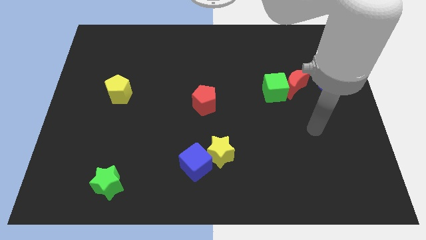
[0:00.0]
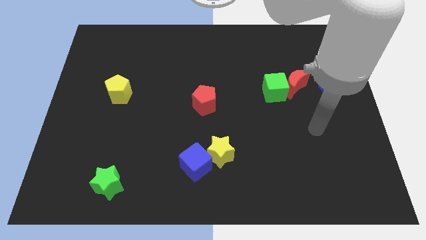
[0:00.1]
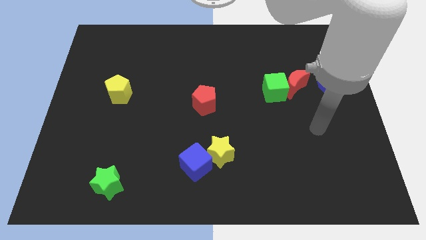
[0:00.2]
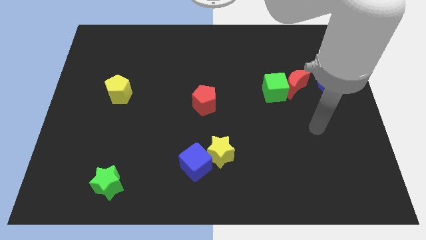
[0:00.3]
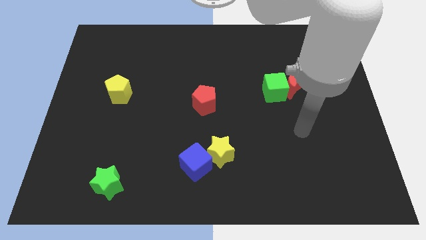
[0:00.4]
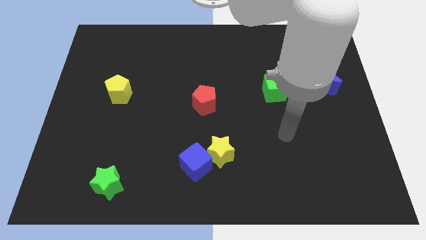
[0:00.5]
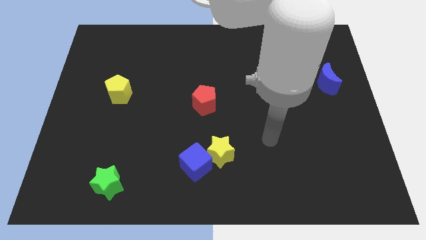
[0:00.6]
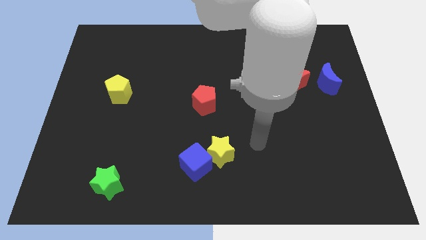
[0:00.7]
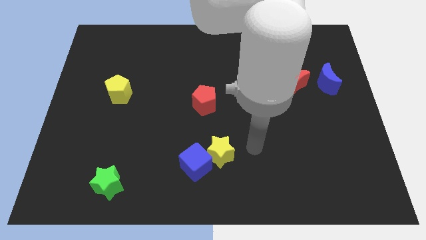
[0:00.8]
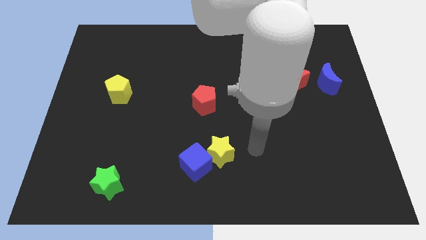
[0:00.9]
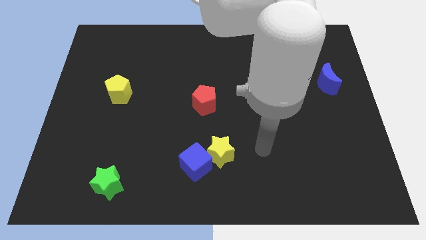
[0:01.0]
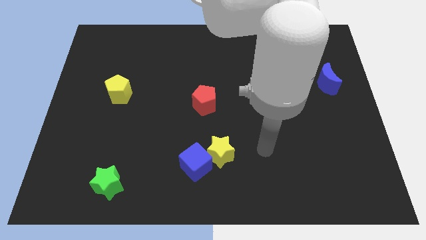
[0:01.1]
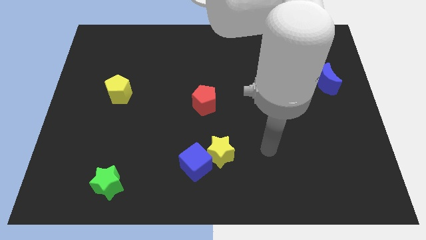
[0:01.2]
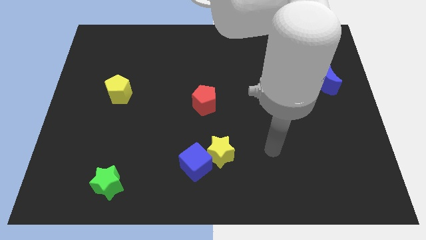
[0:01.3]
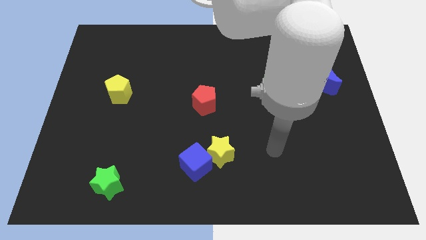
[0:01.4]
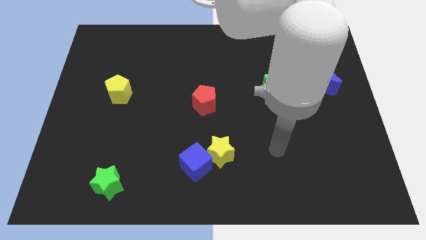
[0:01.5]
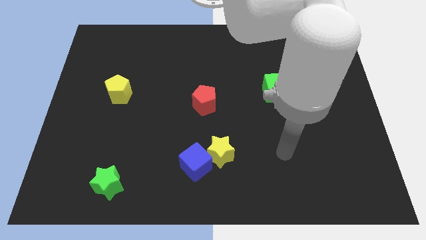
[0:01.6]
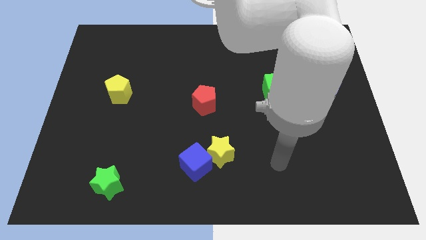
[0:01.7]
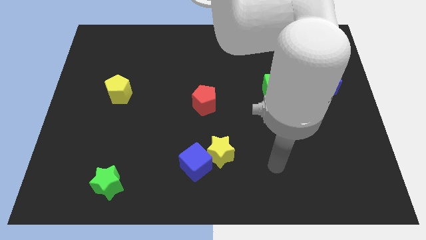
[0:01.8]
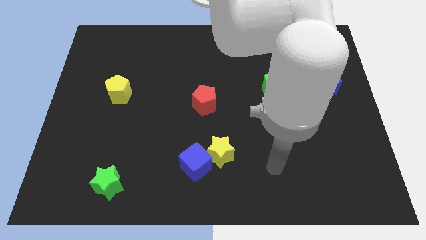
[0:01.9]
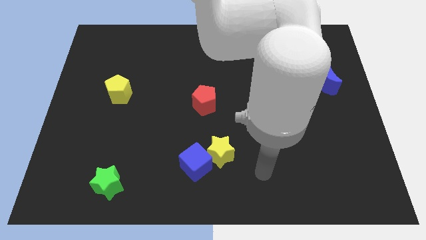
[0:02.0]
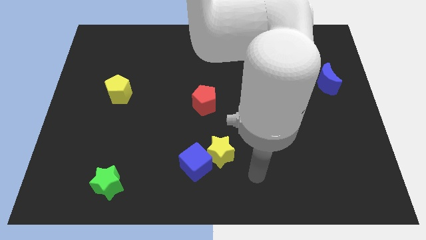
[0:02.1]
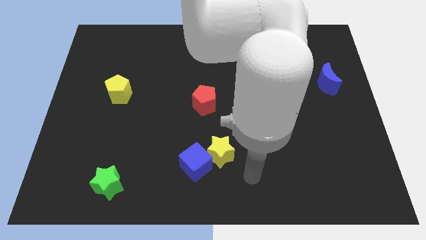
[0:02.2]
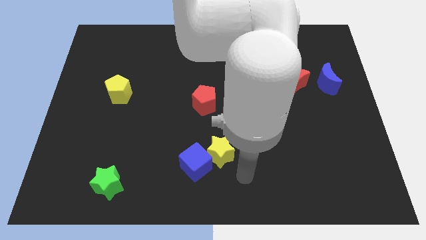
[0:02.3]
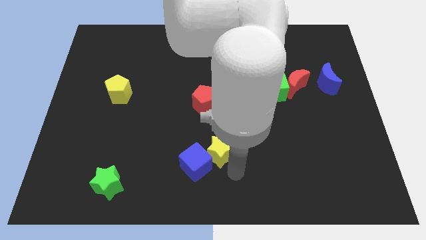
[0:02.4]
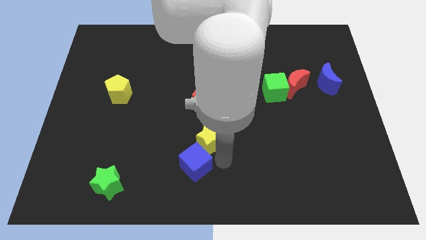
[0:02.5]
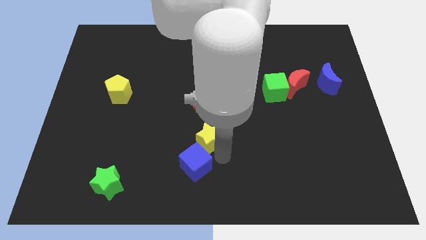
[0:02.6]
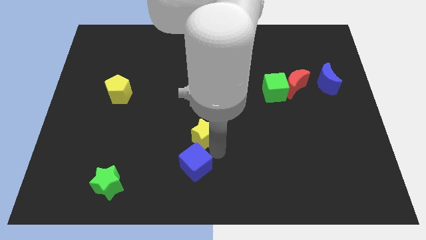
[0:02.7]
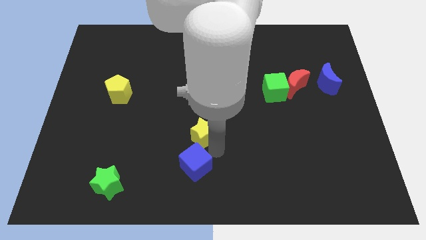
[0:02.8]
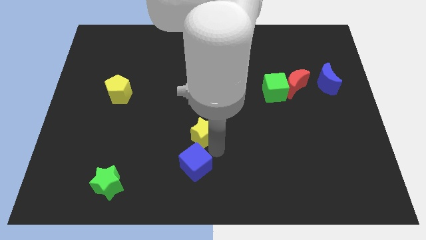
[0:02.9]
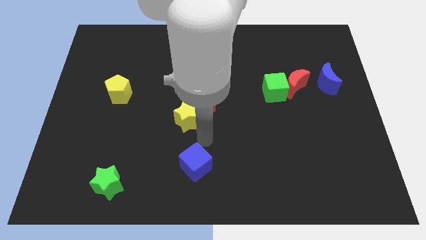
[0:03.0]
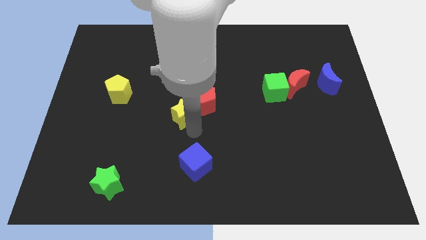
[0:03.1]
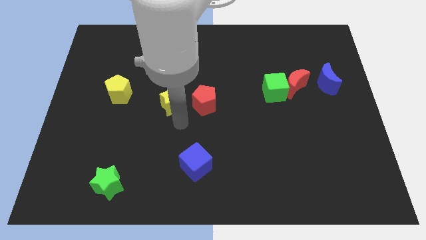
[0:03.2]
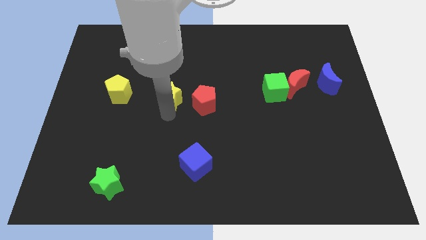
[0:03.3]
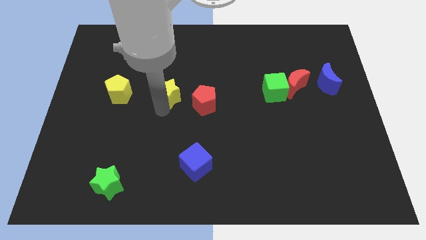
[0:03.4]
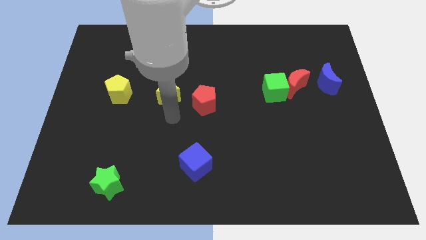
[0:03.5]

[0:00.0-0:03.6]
place the yellow star above the blue cube

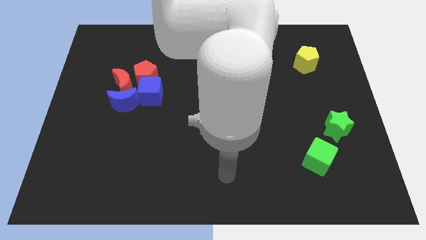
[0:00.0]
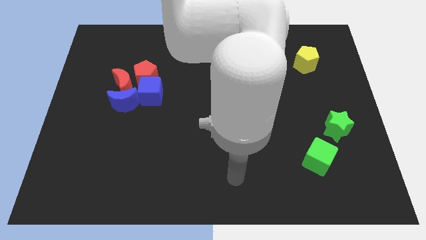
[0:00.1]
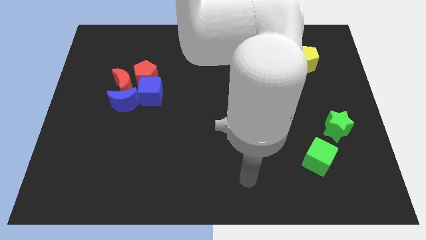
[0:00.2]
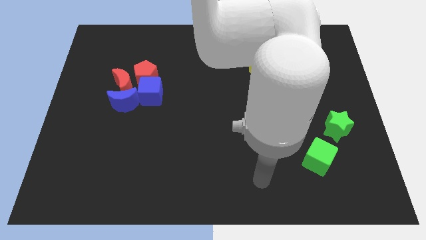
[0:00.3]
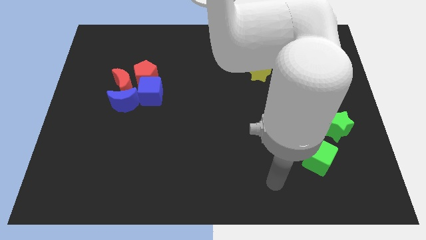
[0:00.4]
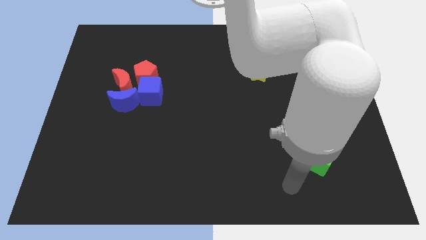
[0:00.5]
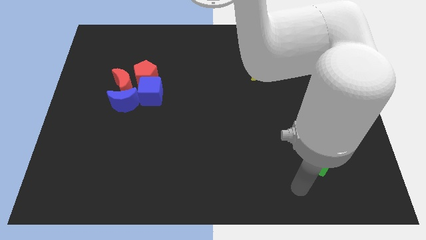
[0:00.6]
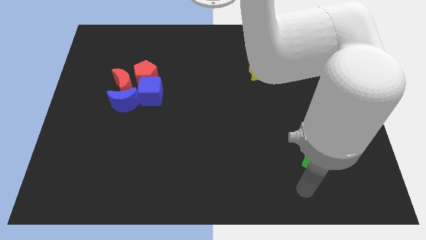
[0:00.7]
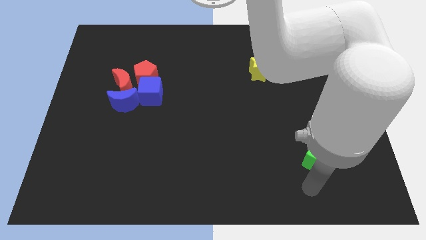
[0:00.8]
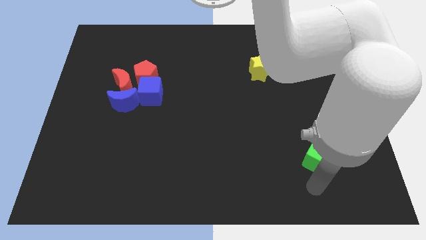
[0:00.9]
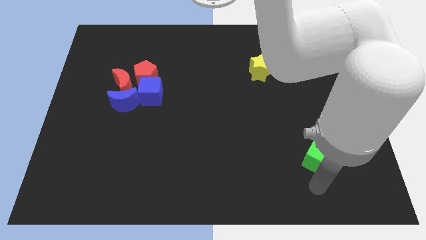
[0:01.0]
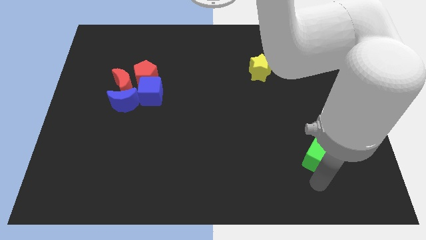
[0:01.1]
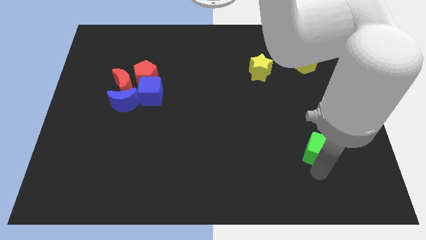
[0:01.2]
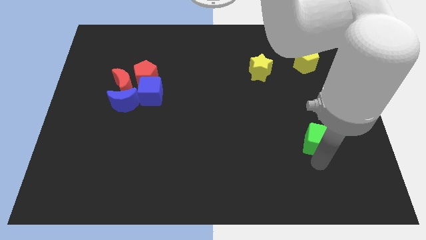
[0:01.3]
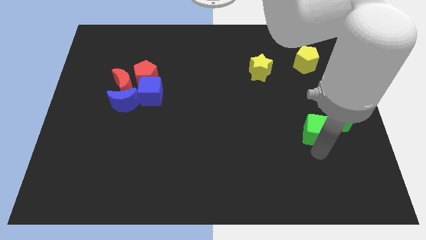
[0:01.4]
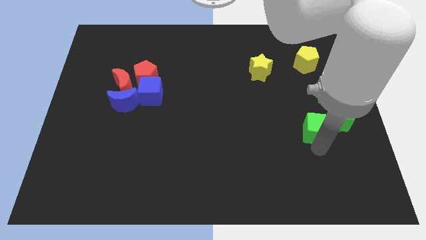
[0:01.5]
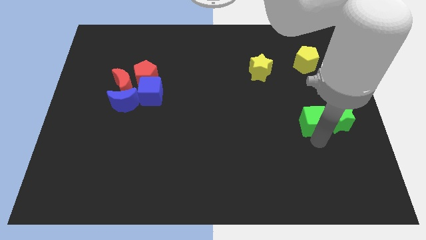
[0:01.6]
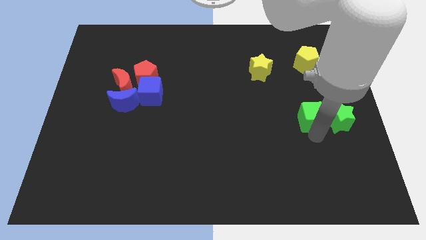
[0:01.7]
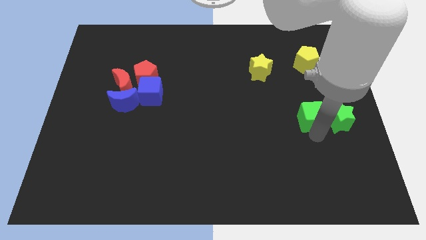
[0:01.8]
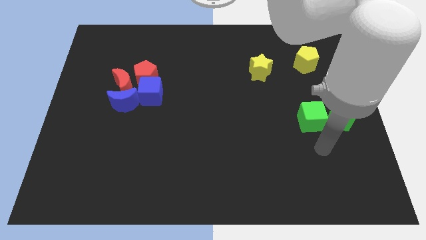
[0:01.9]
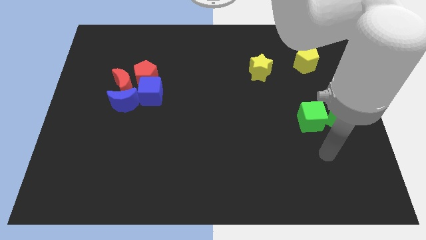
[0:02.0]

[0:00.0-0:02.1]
slide the green cube to the left of the green star

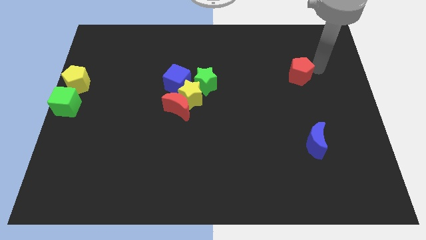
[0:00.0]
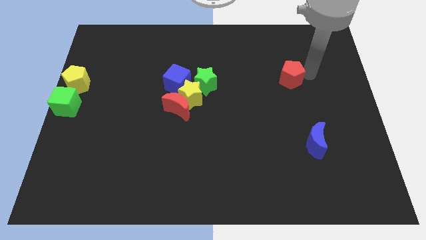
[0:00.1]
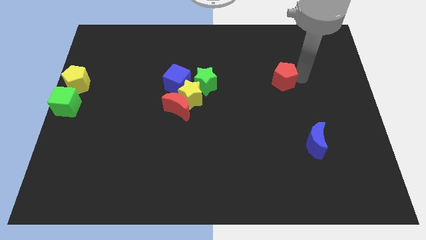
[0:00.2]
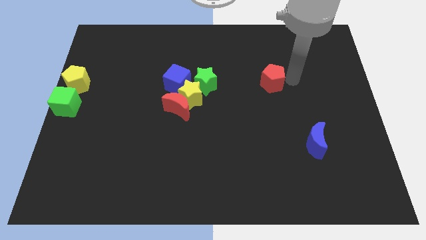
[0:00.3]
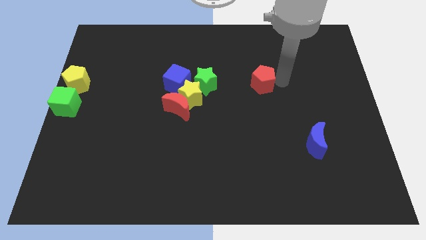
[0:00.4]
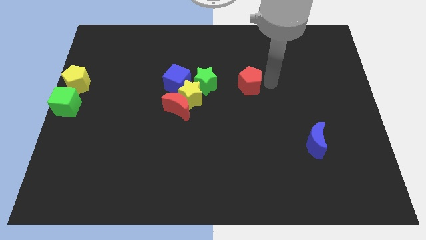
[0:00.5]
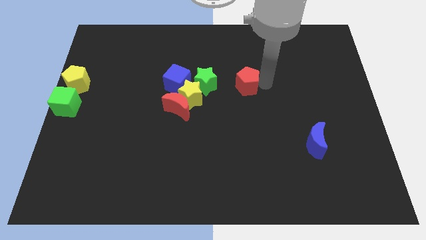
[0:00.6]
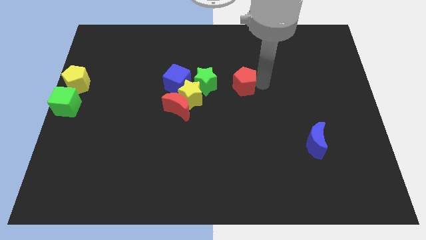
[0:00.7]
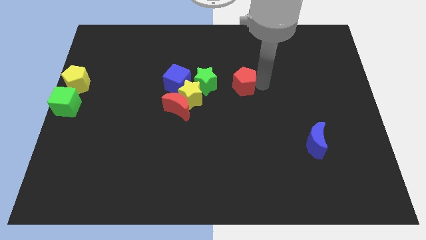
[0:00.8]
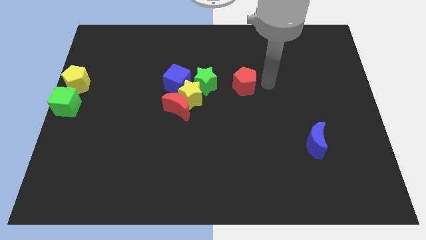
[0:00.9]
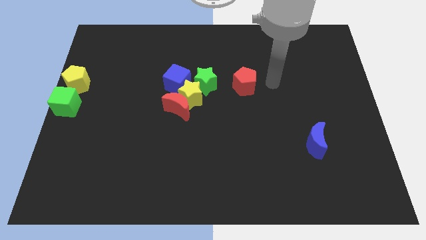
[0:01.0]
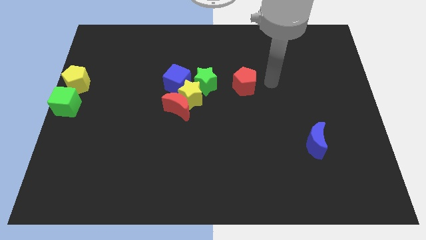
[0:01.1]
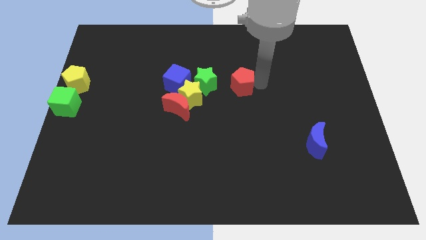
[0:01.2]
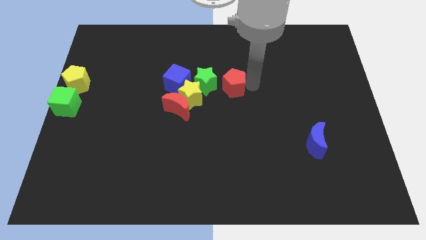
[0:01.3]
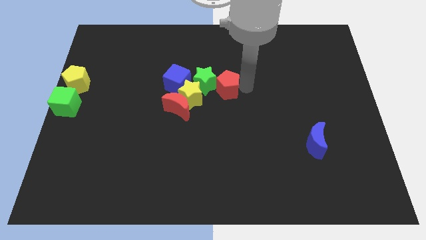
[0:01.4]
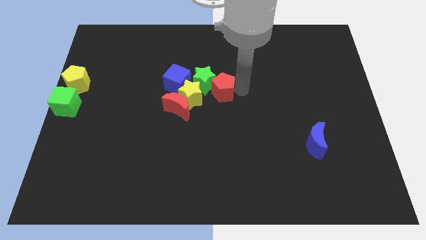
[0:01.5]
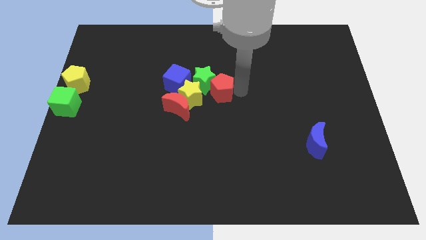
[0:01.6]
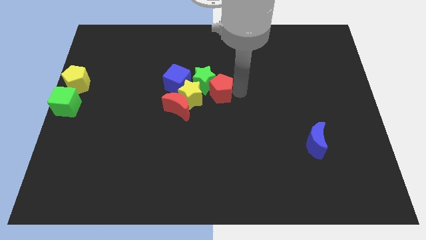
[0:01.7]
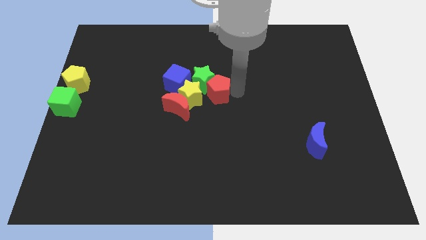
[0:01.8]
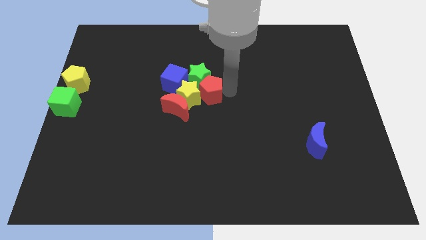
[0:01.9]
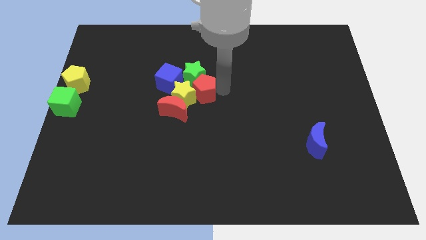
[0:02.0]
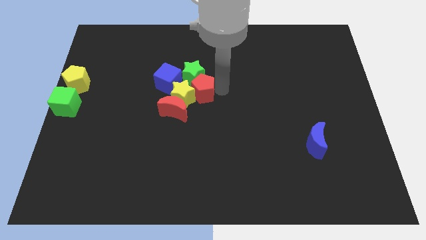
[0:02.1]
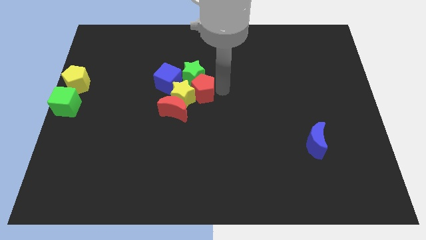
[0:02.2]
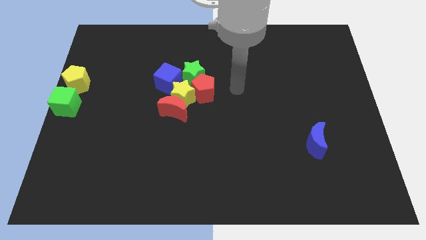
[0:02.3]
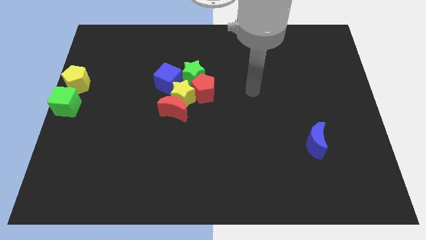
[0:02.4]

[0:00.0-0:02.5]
place the red pentagon to the bottom right of green star

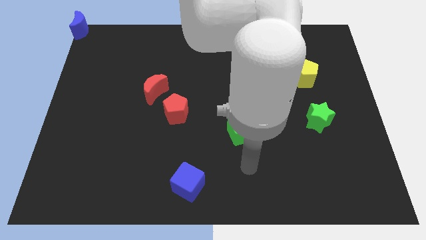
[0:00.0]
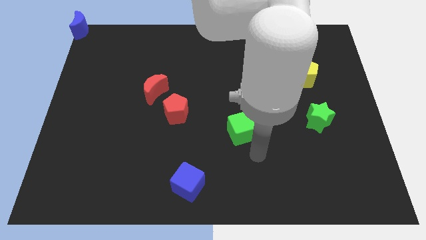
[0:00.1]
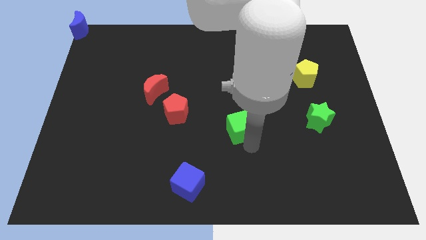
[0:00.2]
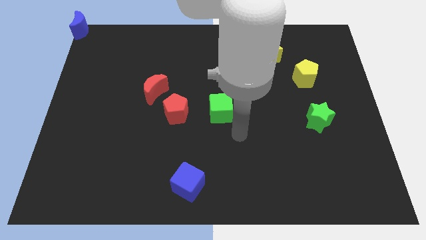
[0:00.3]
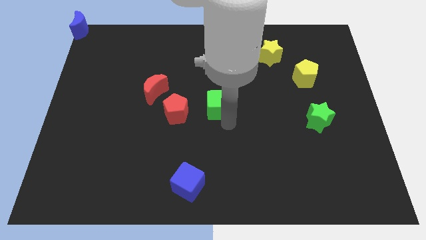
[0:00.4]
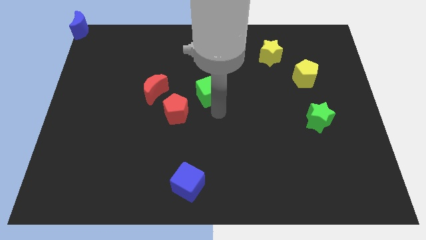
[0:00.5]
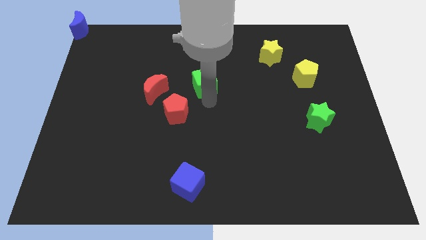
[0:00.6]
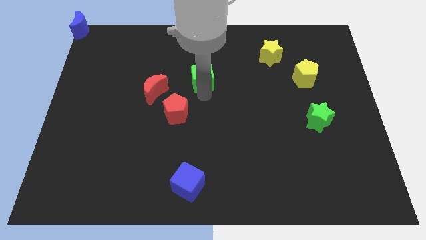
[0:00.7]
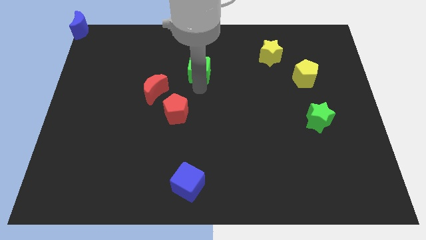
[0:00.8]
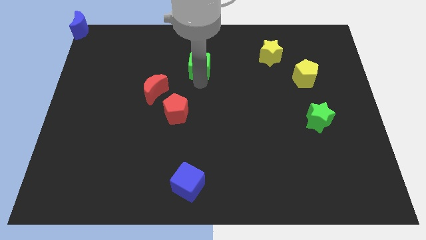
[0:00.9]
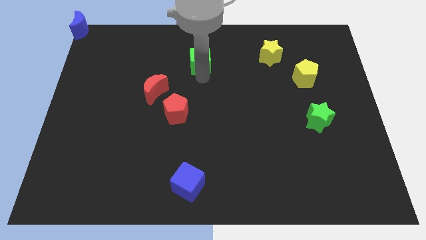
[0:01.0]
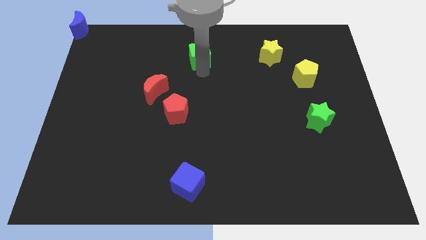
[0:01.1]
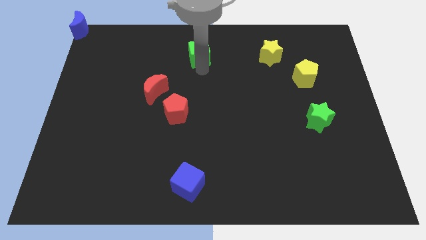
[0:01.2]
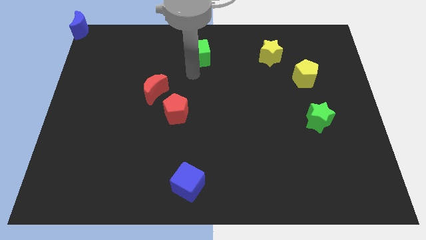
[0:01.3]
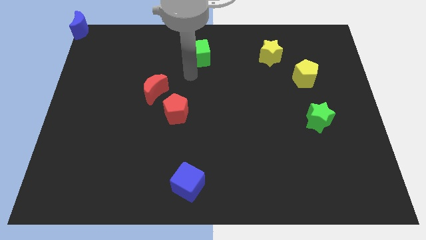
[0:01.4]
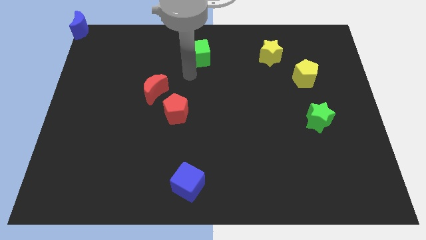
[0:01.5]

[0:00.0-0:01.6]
move the green cube parallel to the yellow star
